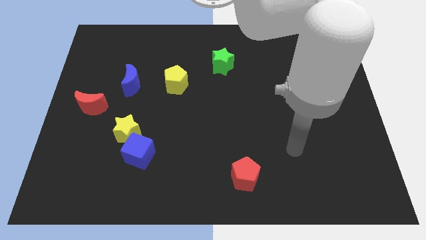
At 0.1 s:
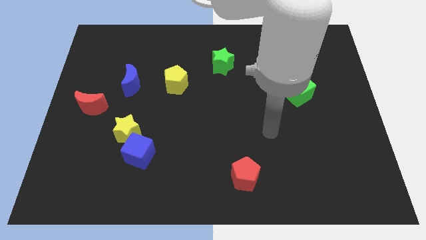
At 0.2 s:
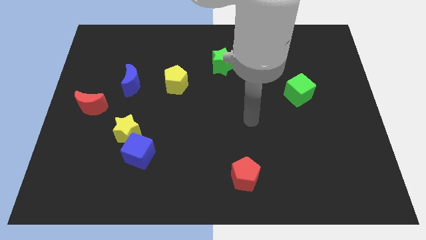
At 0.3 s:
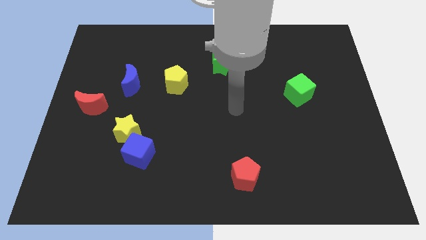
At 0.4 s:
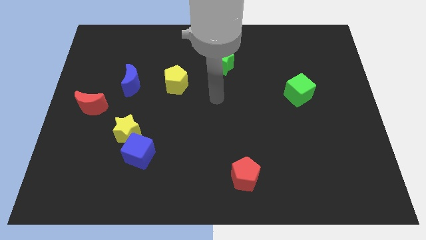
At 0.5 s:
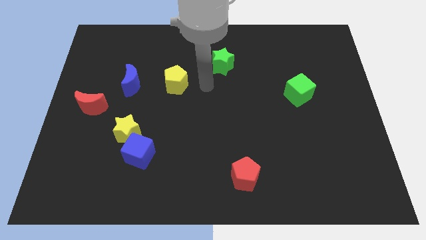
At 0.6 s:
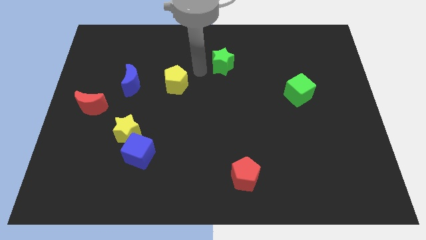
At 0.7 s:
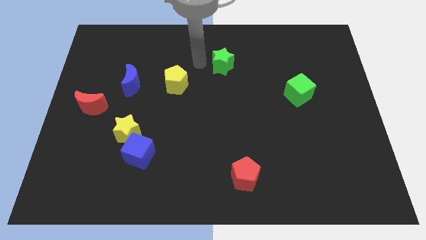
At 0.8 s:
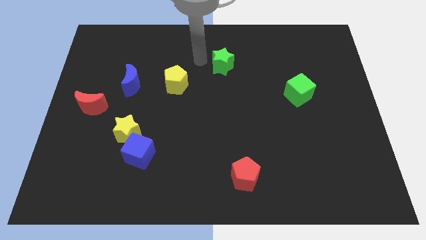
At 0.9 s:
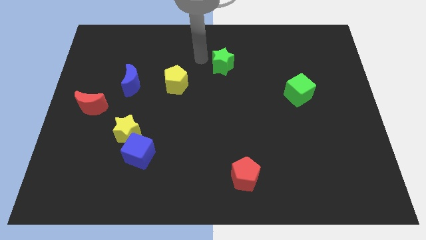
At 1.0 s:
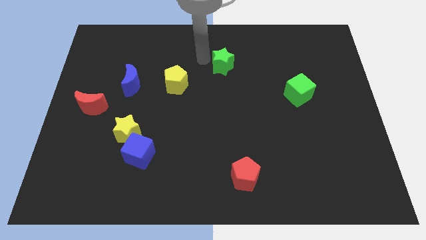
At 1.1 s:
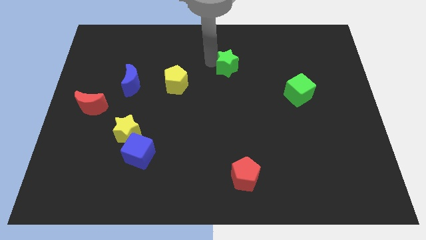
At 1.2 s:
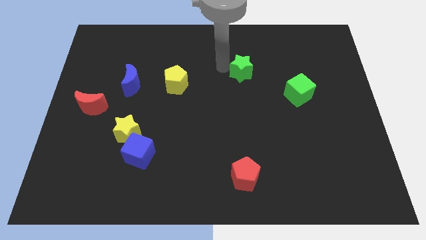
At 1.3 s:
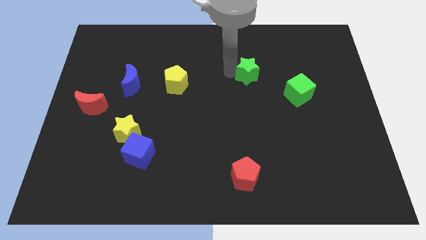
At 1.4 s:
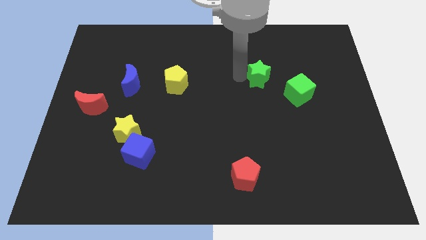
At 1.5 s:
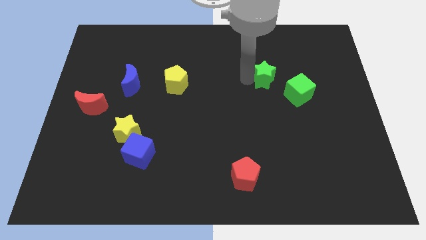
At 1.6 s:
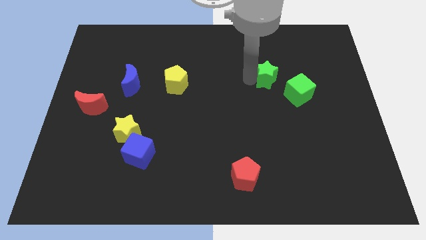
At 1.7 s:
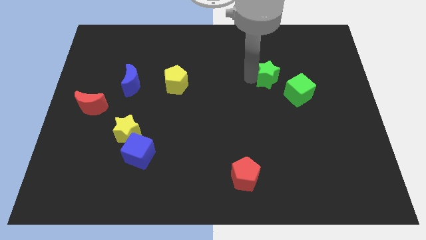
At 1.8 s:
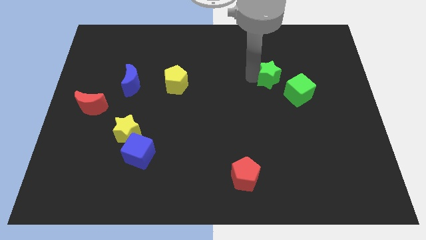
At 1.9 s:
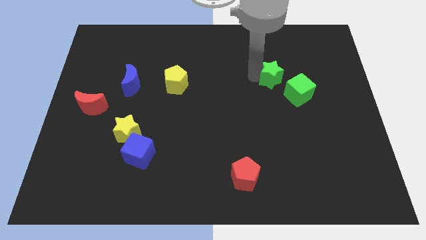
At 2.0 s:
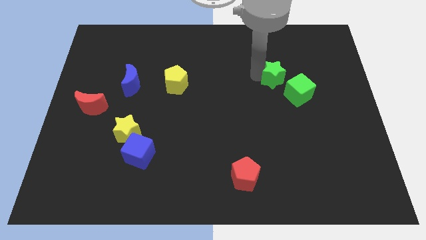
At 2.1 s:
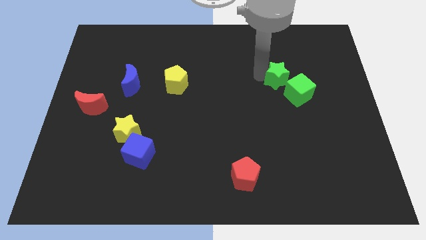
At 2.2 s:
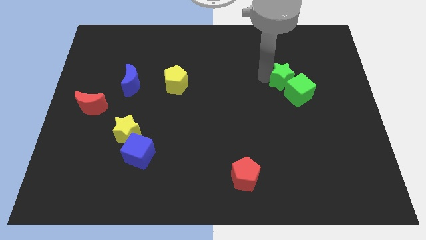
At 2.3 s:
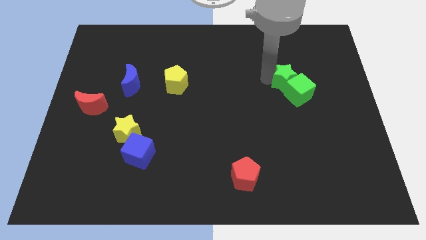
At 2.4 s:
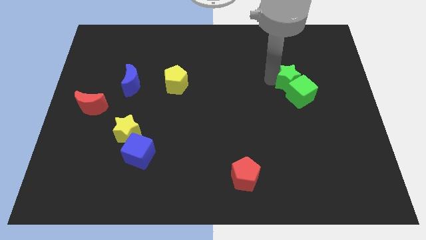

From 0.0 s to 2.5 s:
push the green star close to the green cube

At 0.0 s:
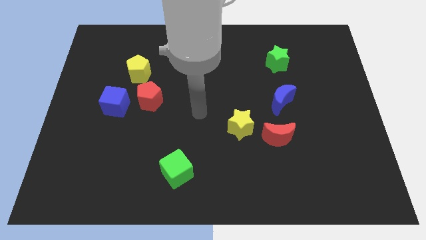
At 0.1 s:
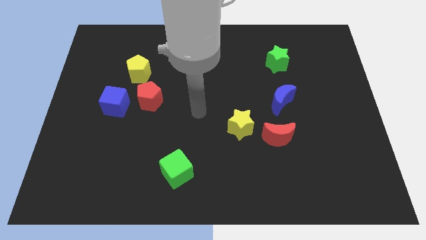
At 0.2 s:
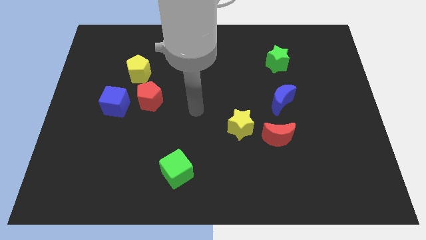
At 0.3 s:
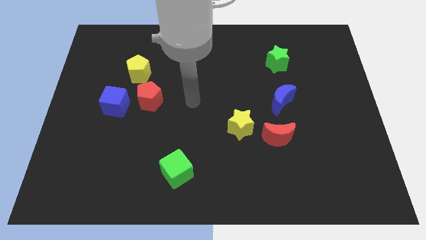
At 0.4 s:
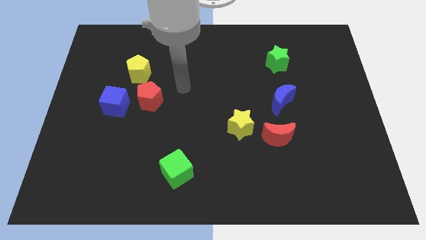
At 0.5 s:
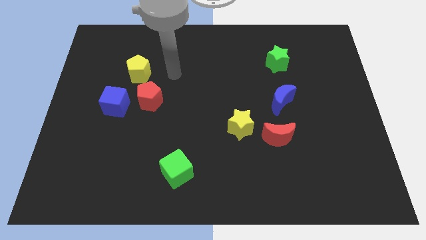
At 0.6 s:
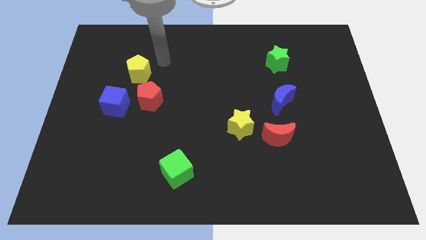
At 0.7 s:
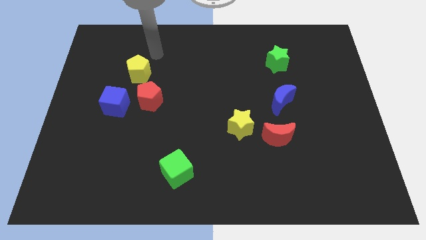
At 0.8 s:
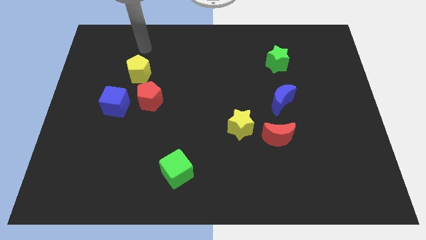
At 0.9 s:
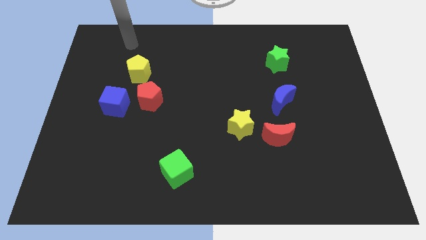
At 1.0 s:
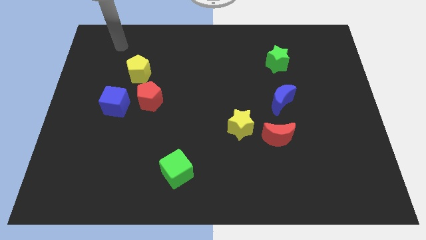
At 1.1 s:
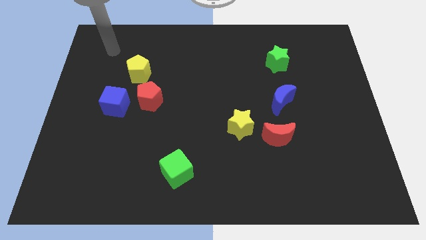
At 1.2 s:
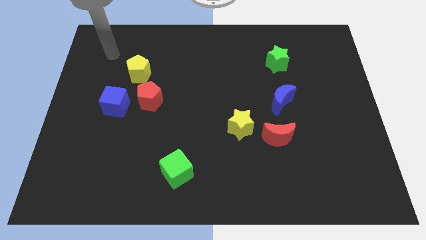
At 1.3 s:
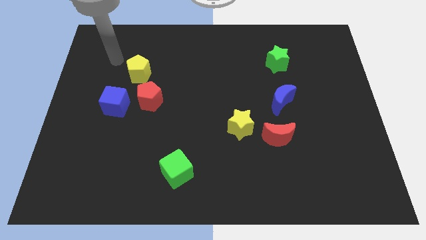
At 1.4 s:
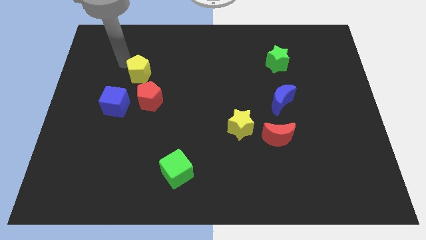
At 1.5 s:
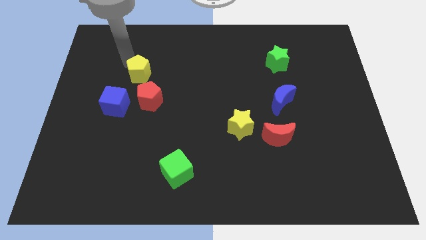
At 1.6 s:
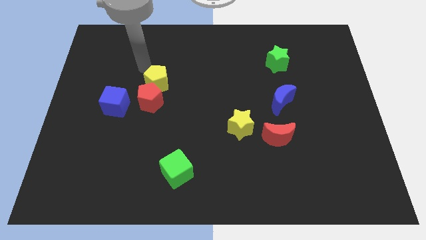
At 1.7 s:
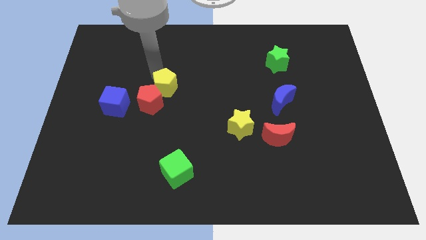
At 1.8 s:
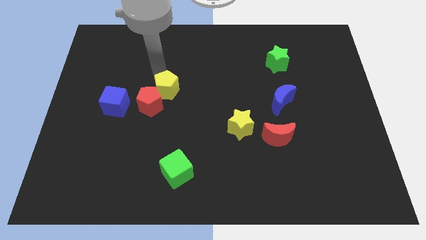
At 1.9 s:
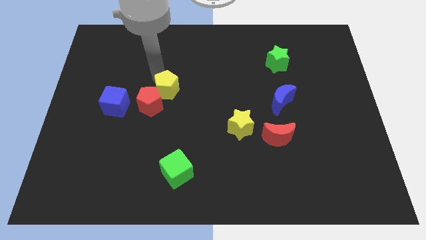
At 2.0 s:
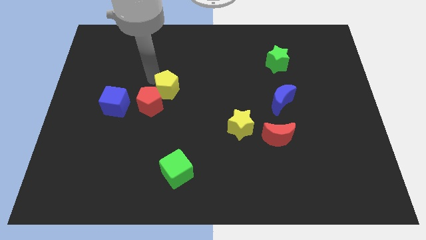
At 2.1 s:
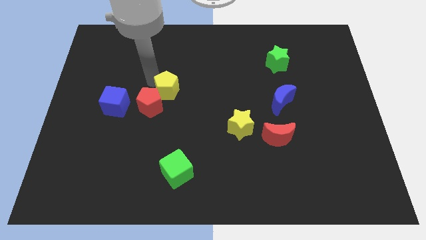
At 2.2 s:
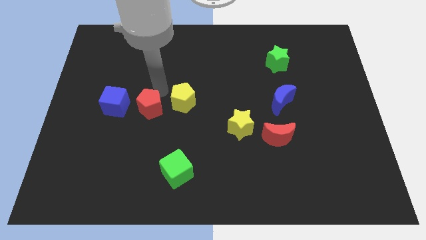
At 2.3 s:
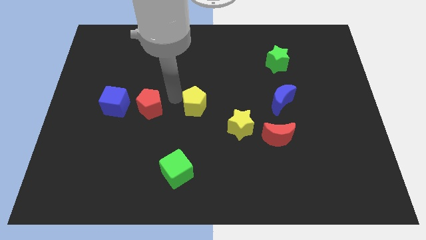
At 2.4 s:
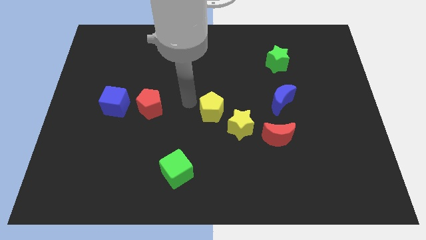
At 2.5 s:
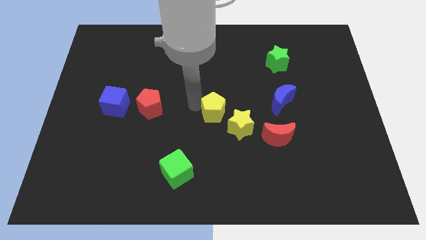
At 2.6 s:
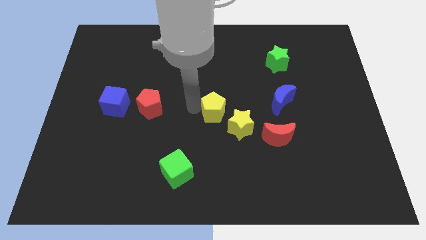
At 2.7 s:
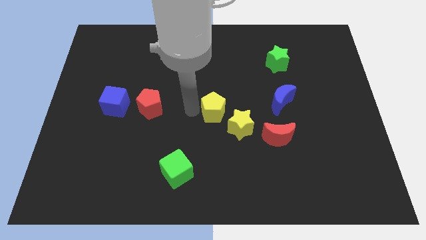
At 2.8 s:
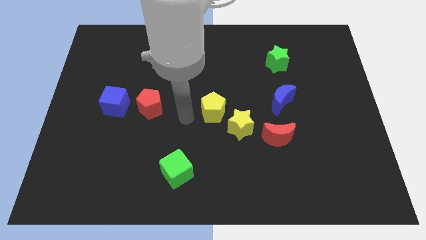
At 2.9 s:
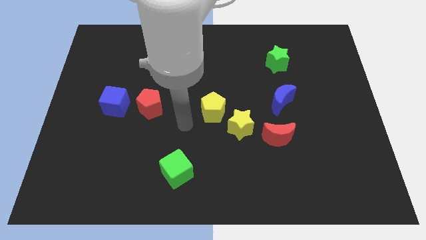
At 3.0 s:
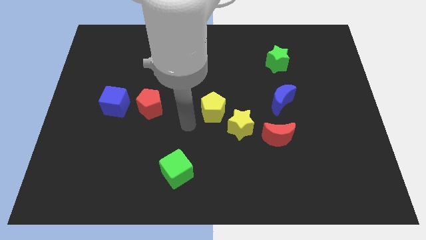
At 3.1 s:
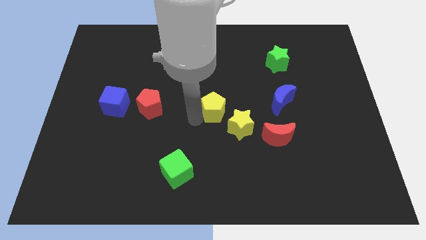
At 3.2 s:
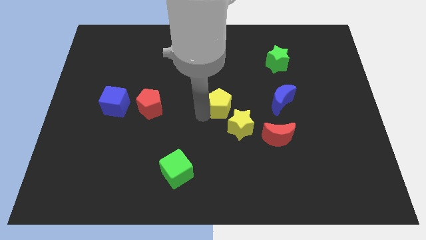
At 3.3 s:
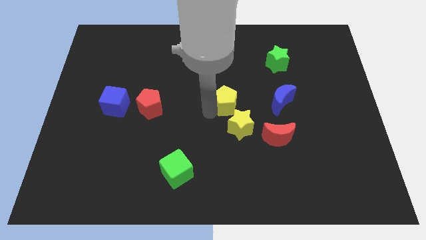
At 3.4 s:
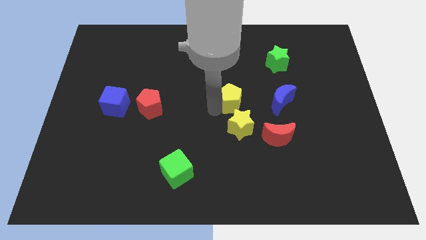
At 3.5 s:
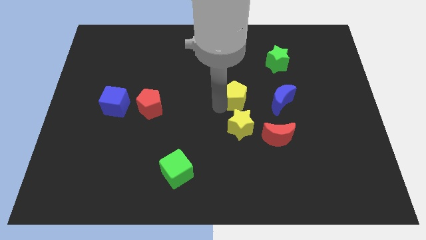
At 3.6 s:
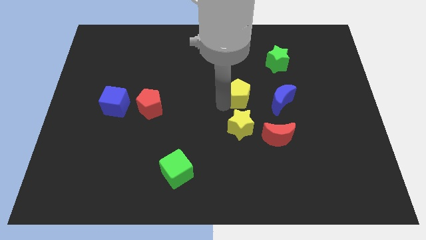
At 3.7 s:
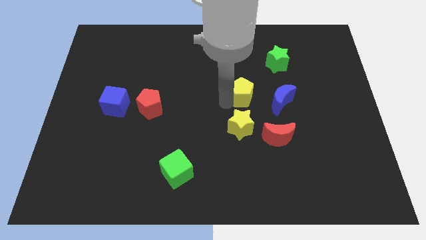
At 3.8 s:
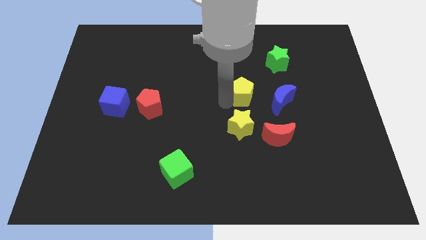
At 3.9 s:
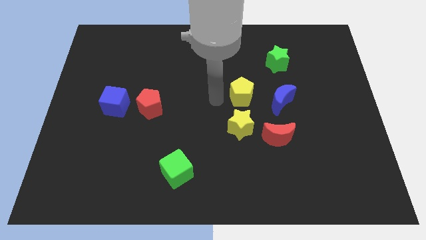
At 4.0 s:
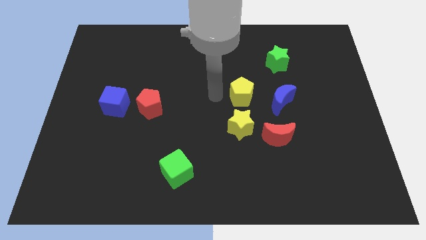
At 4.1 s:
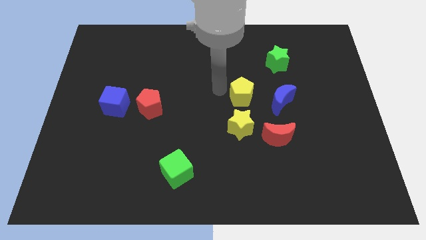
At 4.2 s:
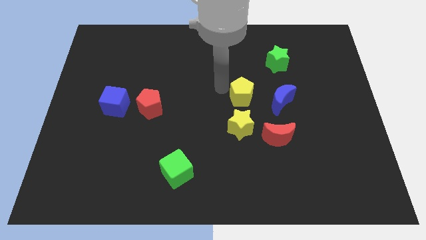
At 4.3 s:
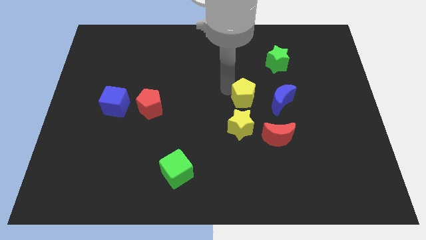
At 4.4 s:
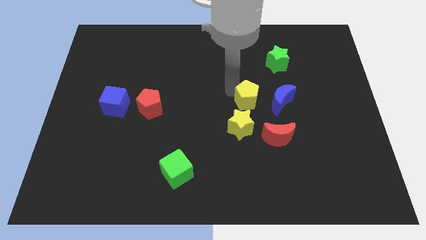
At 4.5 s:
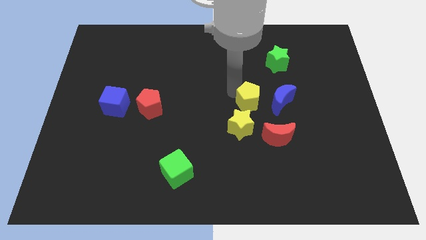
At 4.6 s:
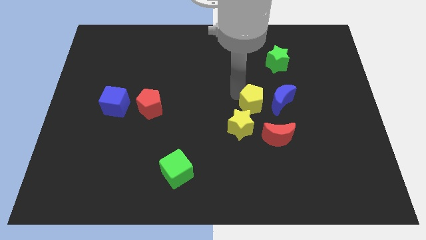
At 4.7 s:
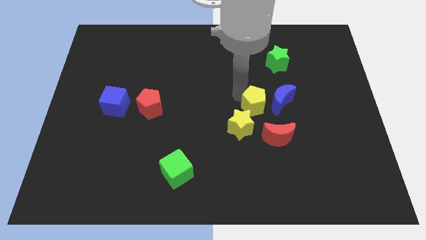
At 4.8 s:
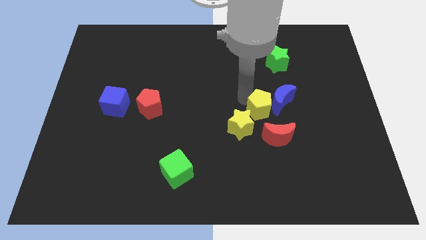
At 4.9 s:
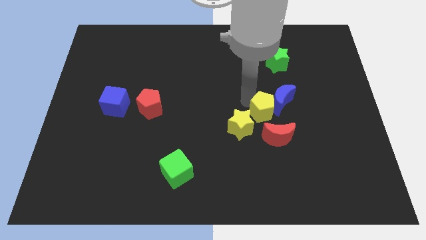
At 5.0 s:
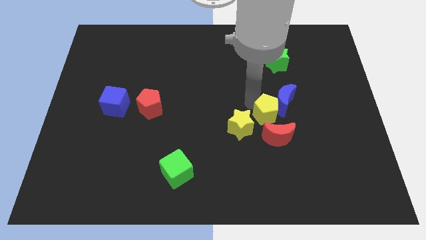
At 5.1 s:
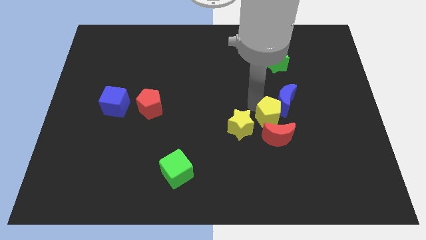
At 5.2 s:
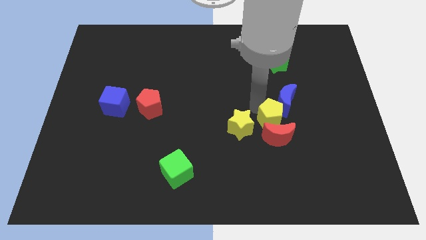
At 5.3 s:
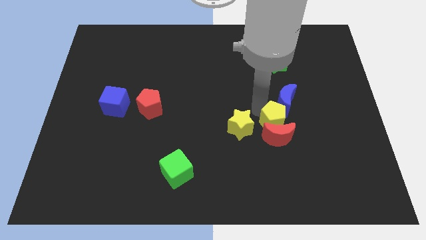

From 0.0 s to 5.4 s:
move the yellow pentagon to the red moon

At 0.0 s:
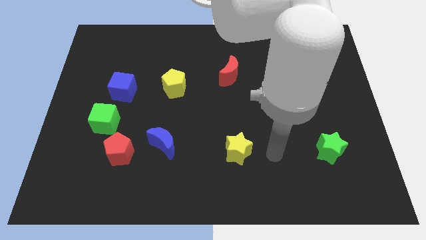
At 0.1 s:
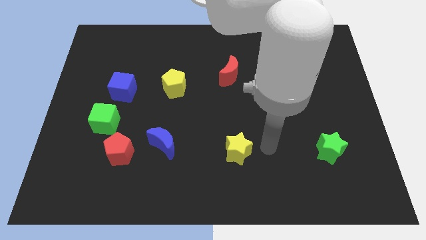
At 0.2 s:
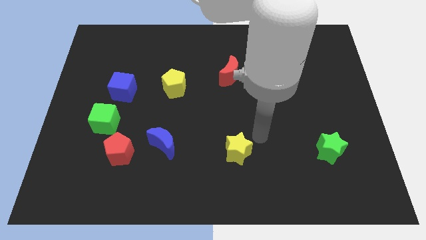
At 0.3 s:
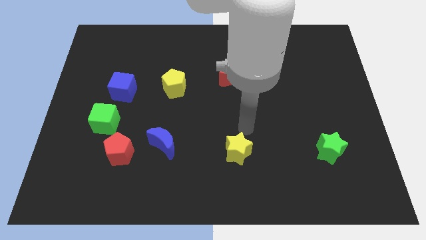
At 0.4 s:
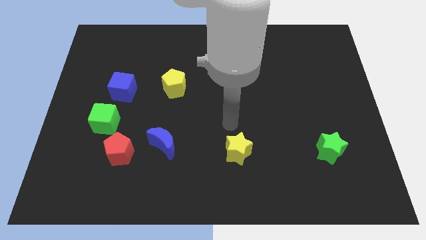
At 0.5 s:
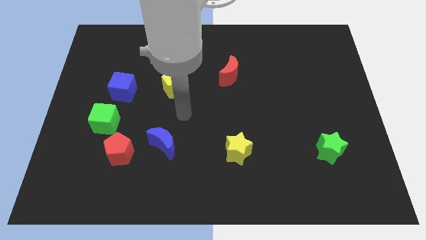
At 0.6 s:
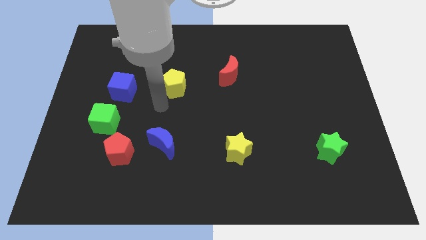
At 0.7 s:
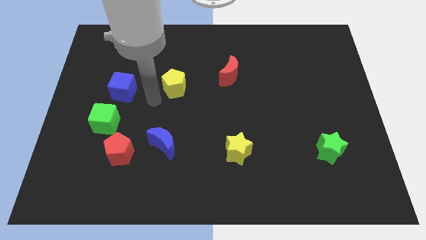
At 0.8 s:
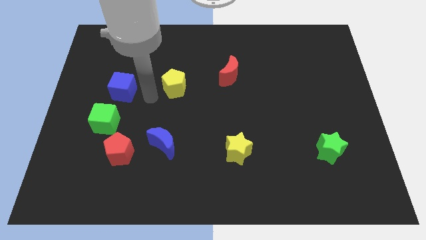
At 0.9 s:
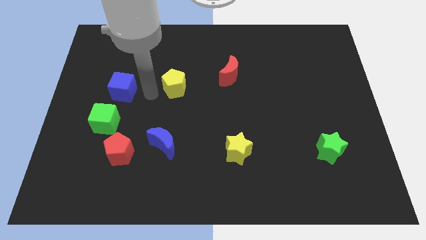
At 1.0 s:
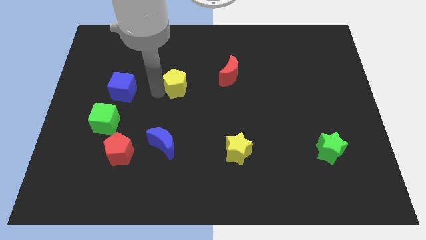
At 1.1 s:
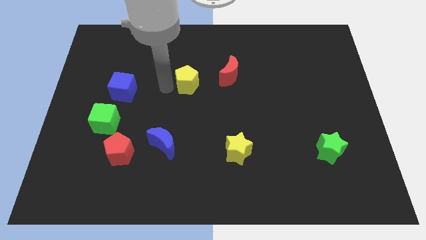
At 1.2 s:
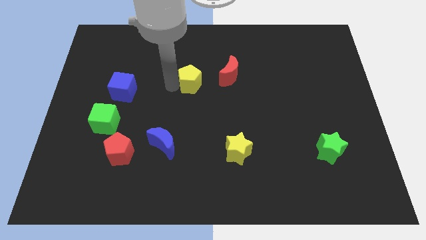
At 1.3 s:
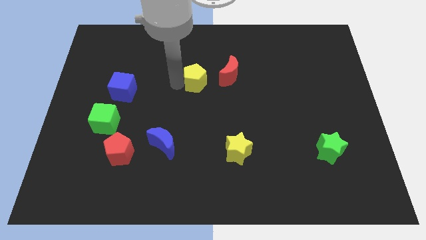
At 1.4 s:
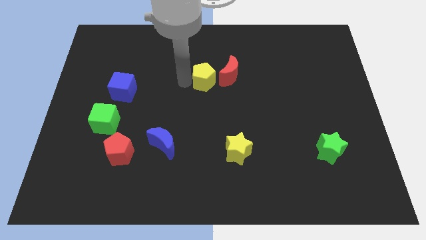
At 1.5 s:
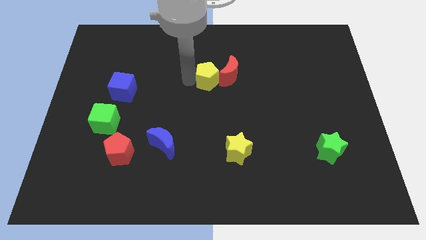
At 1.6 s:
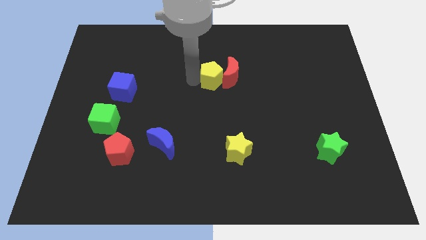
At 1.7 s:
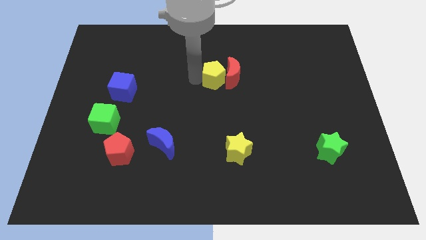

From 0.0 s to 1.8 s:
slide the yellow pentagon towards the red moon
